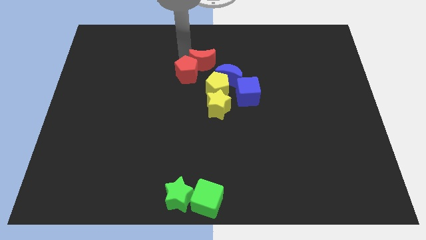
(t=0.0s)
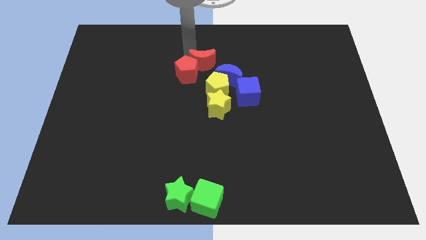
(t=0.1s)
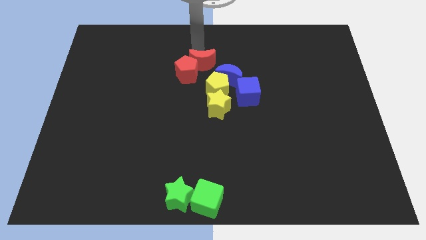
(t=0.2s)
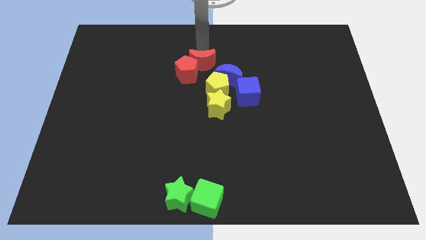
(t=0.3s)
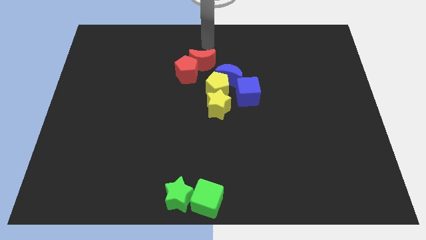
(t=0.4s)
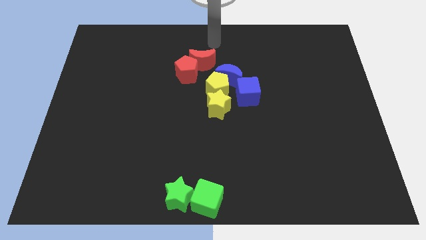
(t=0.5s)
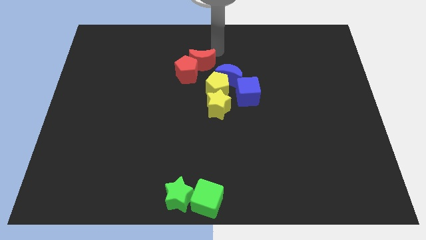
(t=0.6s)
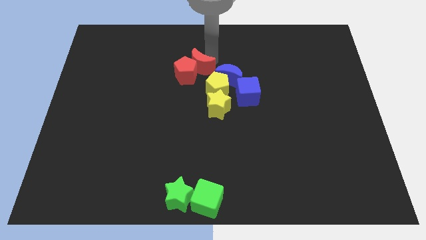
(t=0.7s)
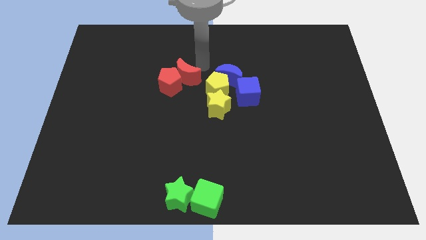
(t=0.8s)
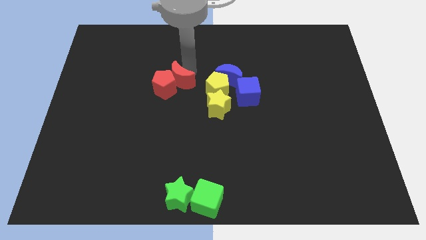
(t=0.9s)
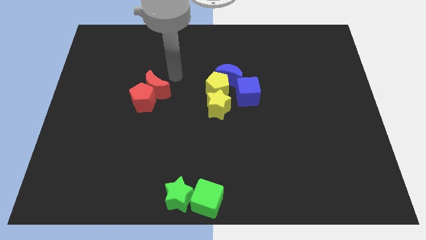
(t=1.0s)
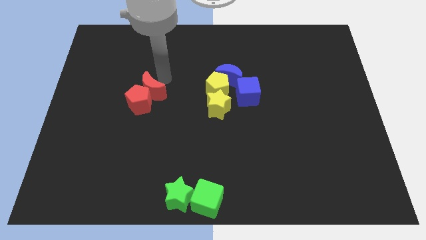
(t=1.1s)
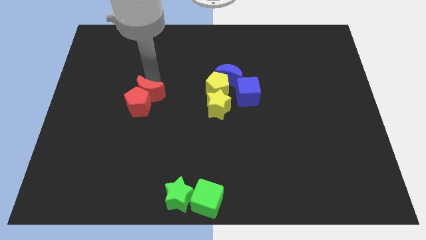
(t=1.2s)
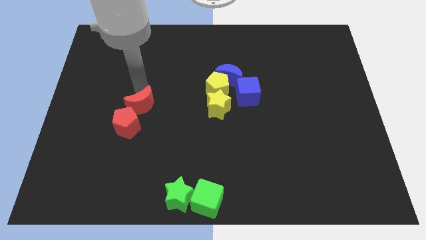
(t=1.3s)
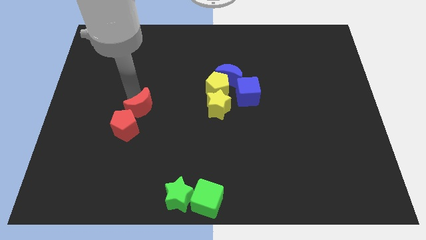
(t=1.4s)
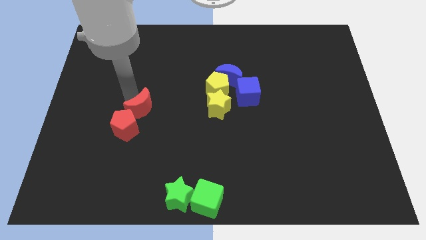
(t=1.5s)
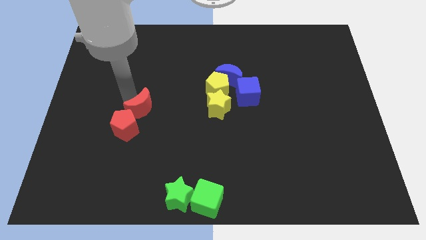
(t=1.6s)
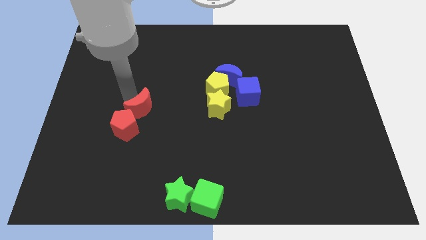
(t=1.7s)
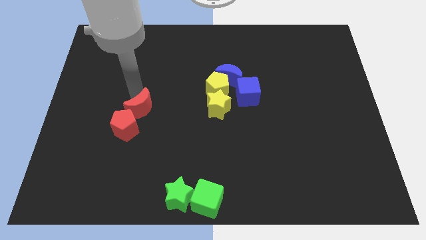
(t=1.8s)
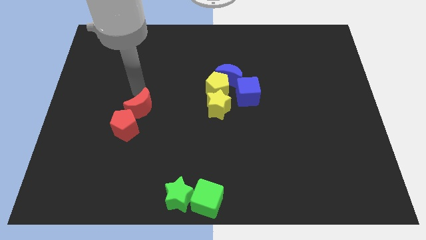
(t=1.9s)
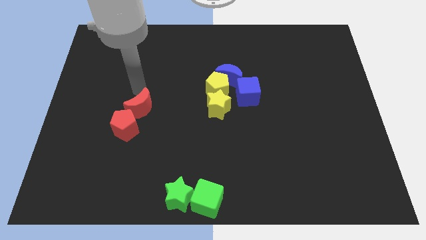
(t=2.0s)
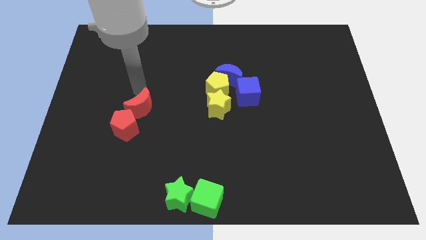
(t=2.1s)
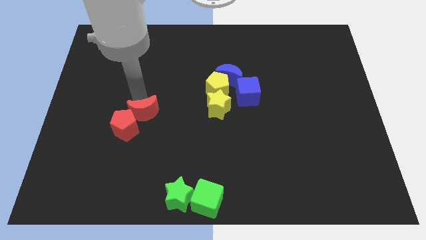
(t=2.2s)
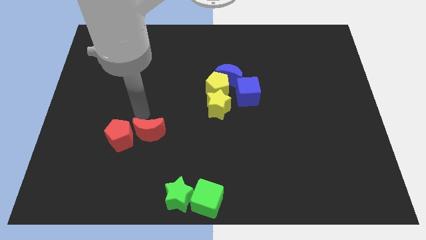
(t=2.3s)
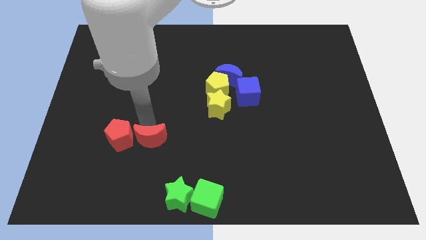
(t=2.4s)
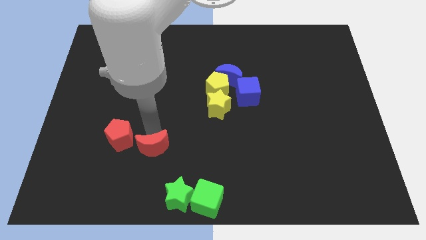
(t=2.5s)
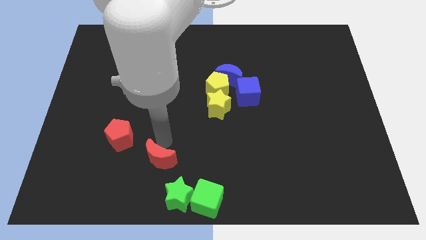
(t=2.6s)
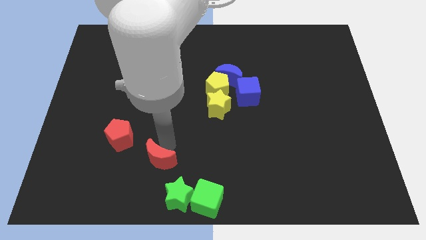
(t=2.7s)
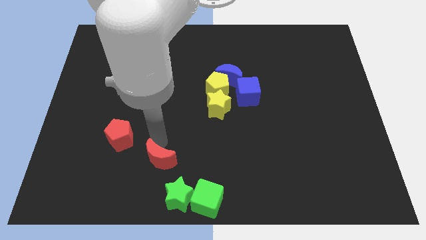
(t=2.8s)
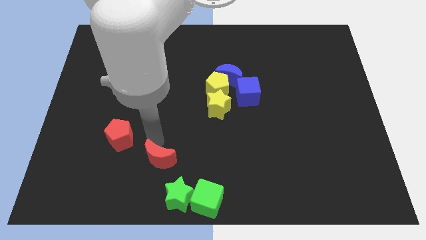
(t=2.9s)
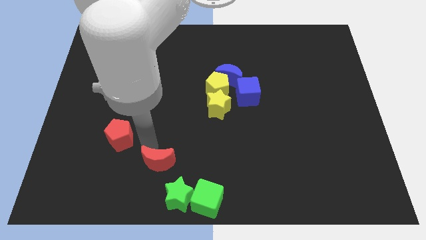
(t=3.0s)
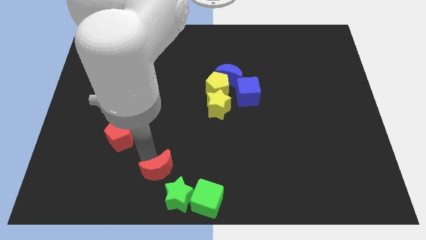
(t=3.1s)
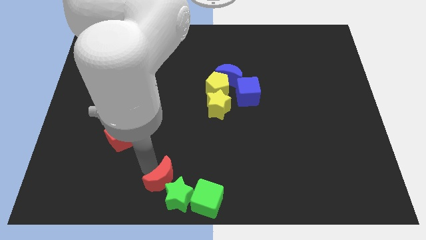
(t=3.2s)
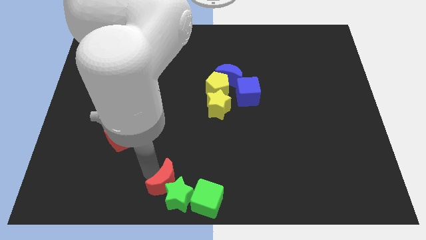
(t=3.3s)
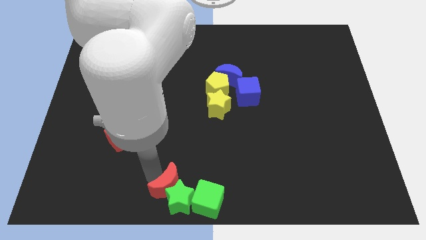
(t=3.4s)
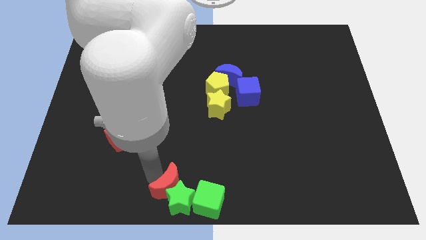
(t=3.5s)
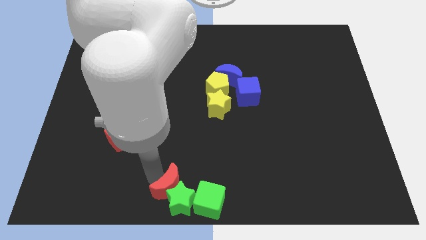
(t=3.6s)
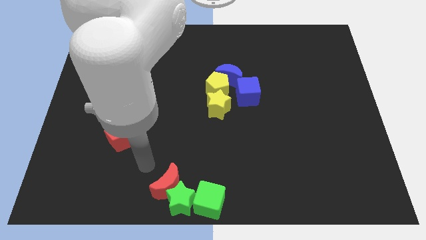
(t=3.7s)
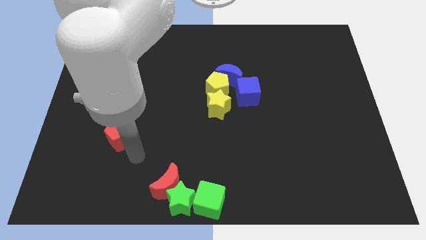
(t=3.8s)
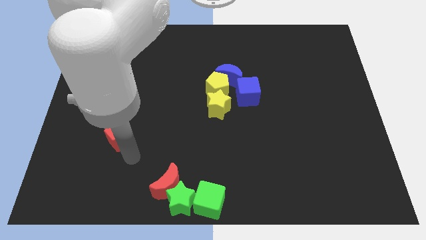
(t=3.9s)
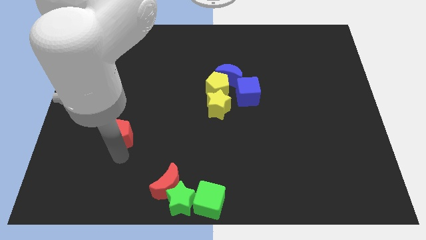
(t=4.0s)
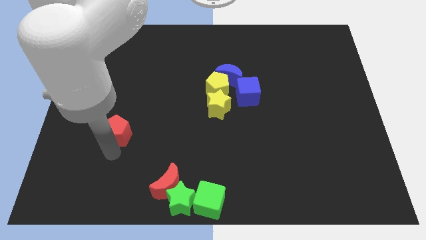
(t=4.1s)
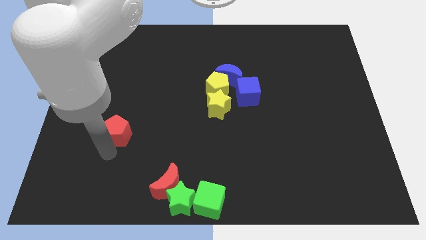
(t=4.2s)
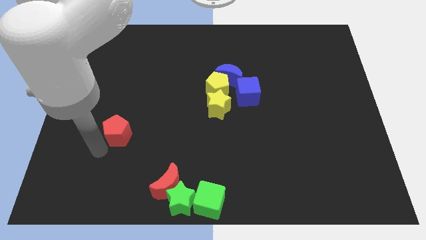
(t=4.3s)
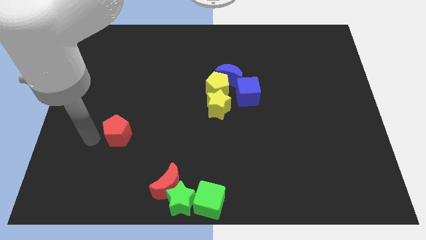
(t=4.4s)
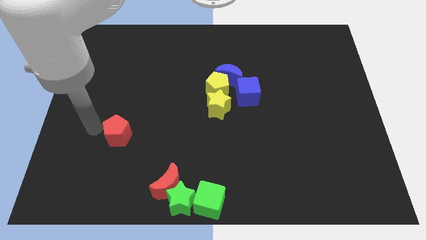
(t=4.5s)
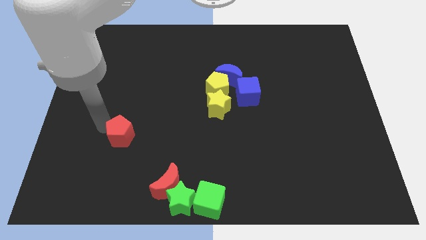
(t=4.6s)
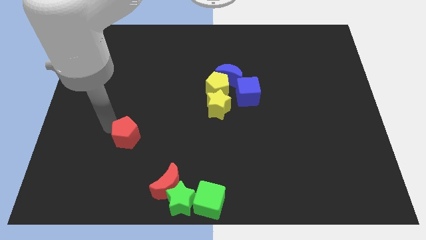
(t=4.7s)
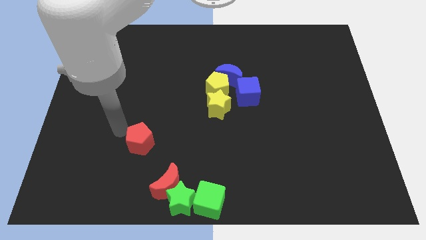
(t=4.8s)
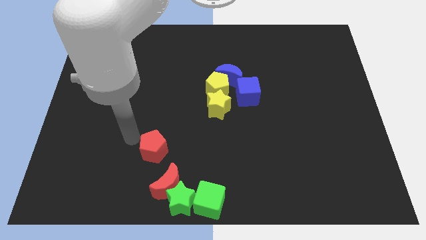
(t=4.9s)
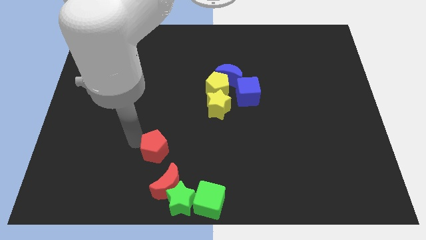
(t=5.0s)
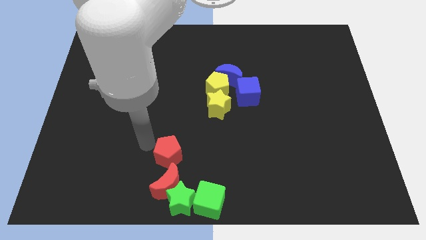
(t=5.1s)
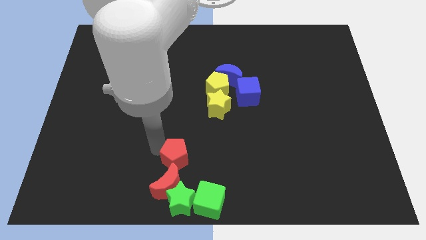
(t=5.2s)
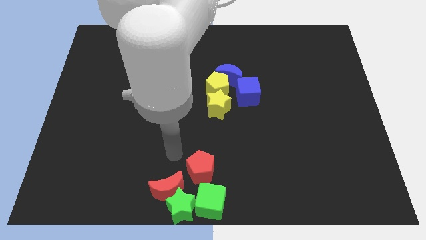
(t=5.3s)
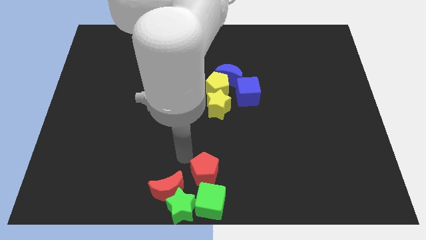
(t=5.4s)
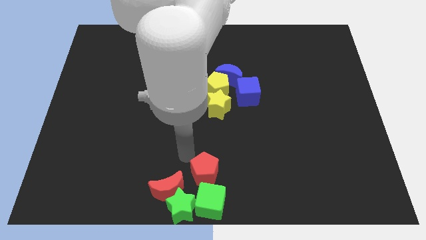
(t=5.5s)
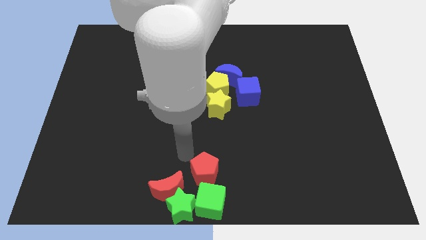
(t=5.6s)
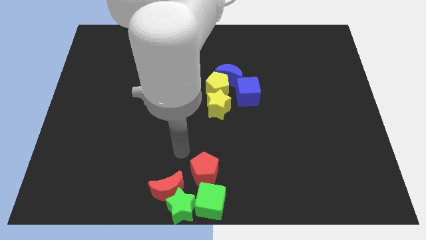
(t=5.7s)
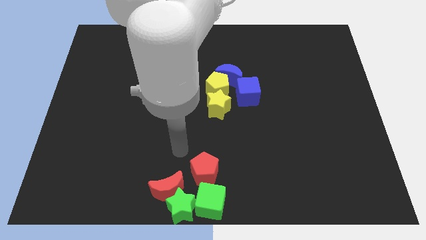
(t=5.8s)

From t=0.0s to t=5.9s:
push both the red blocks towards the bottom center of the board

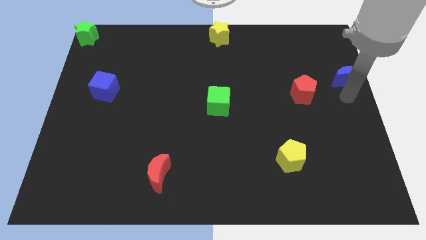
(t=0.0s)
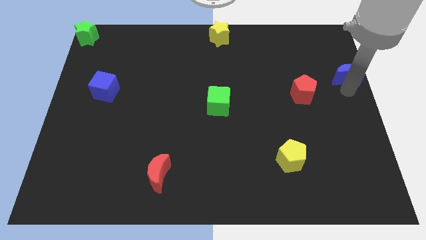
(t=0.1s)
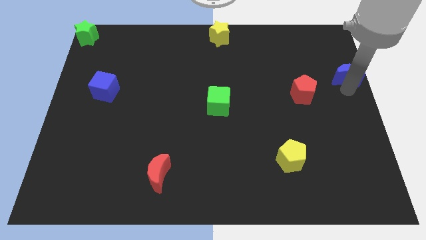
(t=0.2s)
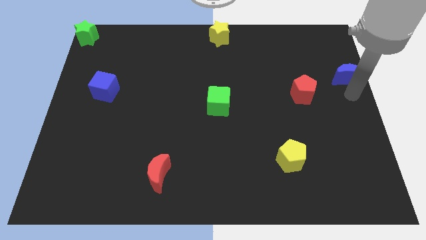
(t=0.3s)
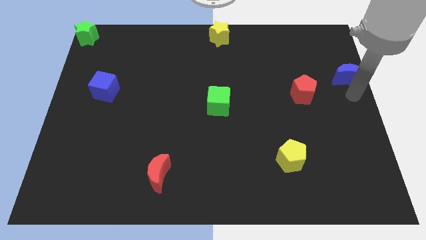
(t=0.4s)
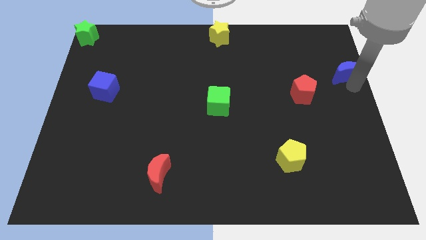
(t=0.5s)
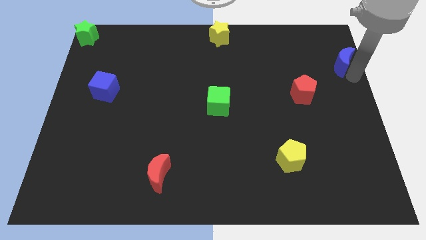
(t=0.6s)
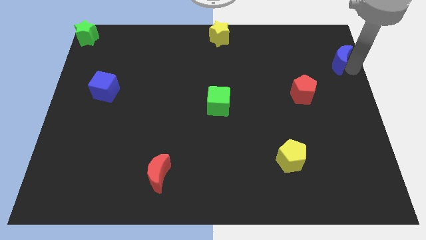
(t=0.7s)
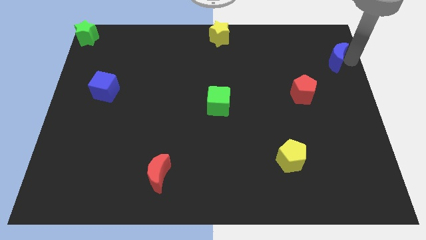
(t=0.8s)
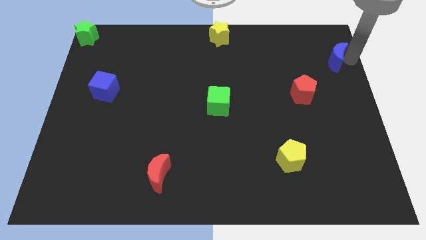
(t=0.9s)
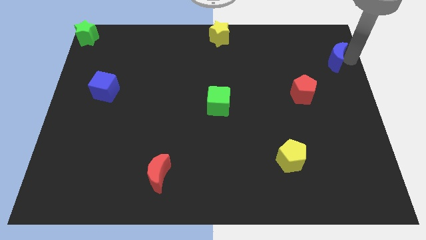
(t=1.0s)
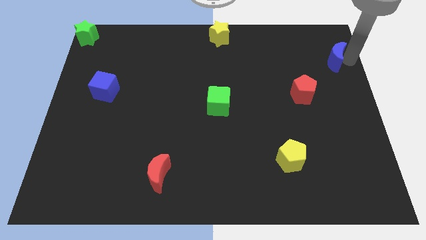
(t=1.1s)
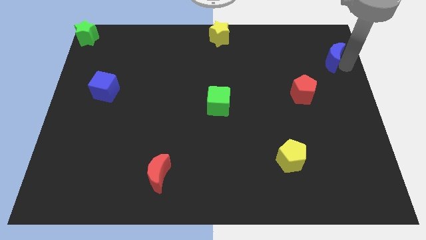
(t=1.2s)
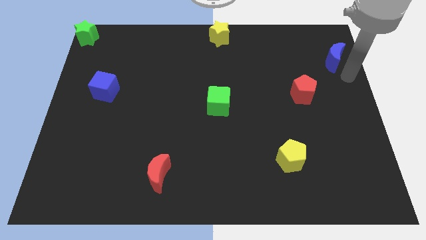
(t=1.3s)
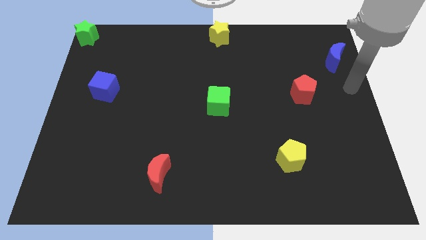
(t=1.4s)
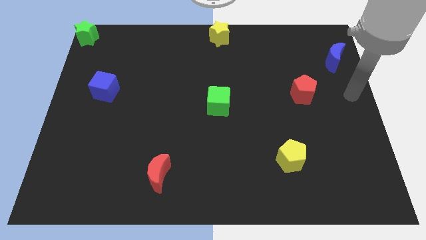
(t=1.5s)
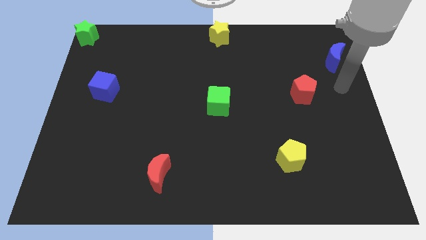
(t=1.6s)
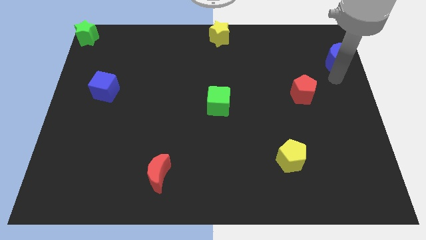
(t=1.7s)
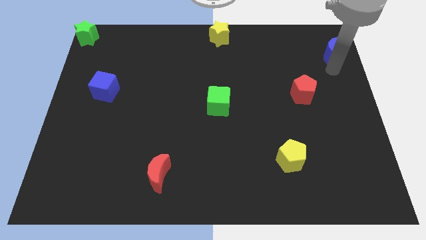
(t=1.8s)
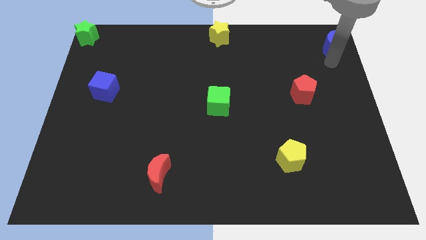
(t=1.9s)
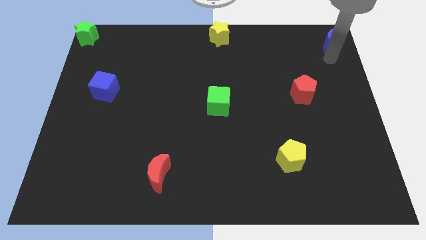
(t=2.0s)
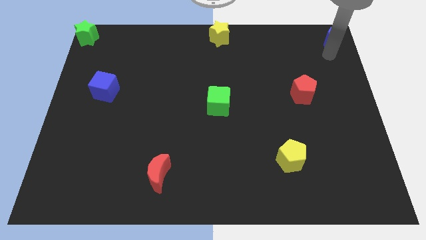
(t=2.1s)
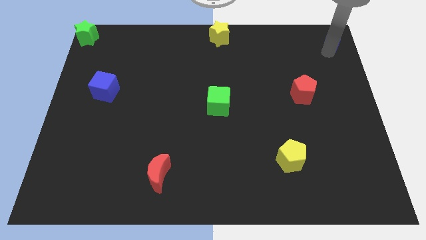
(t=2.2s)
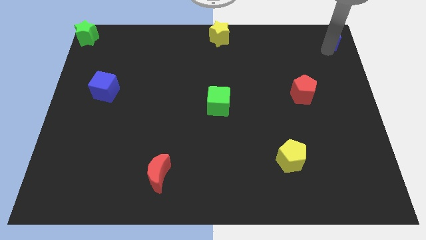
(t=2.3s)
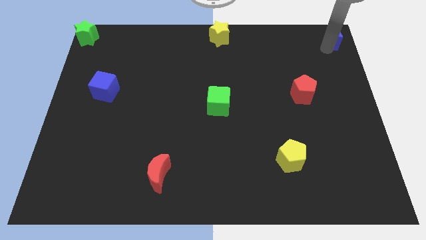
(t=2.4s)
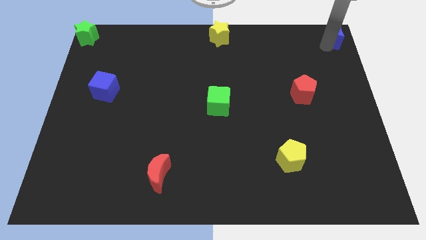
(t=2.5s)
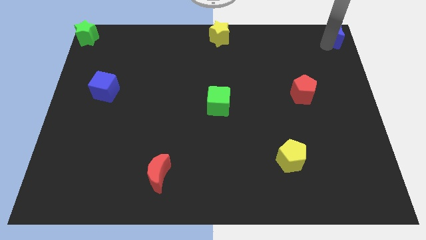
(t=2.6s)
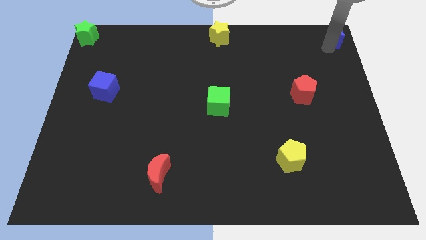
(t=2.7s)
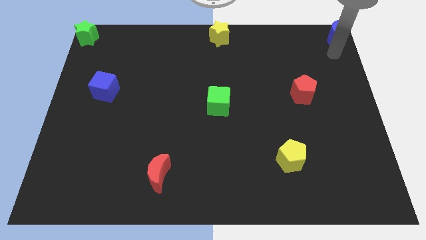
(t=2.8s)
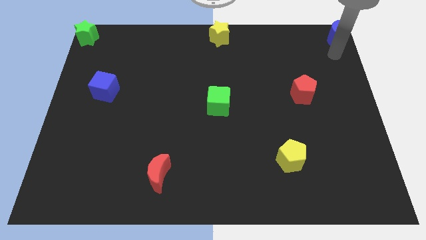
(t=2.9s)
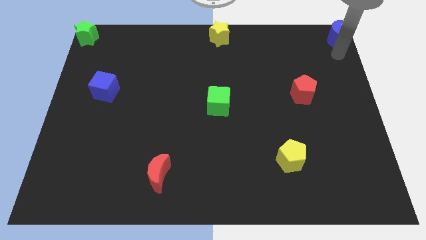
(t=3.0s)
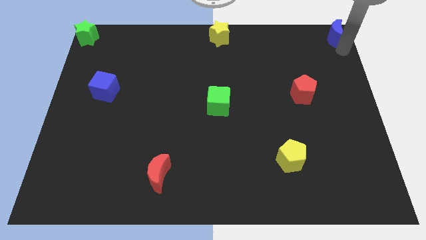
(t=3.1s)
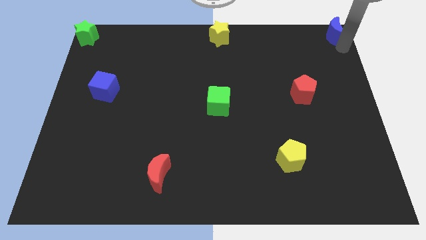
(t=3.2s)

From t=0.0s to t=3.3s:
drag the blue moon to the top right corner of the board
